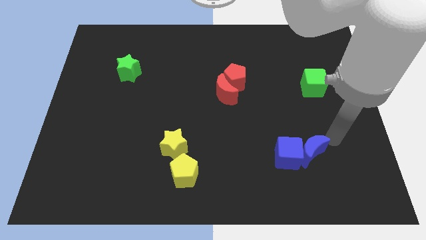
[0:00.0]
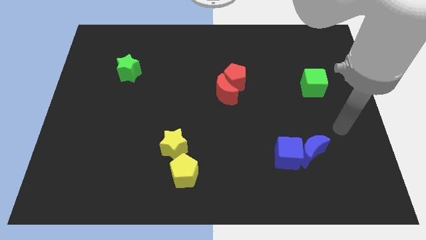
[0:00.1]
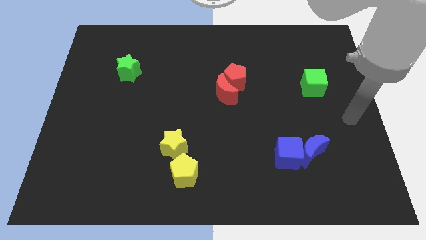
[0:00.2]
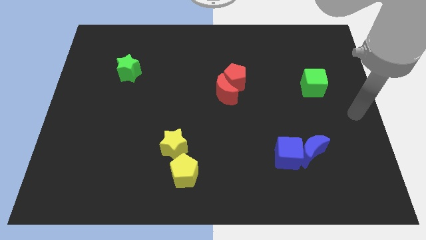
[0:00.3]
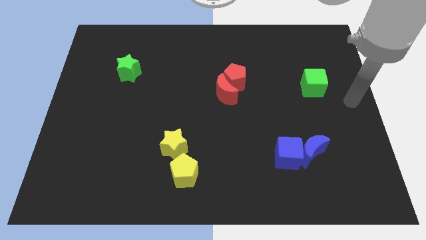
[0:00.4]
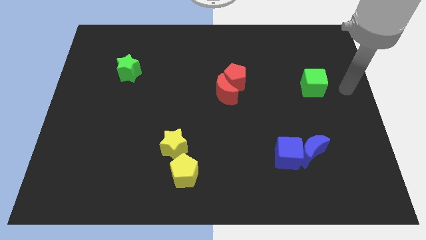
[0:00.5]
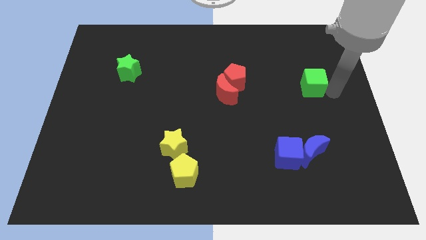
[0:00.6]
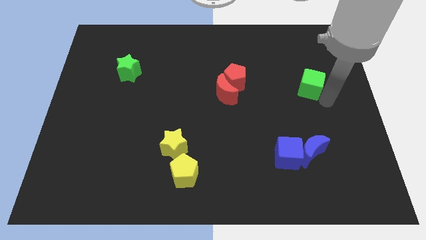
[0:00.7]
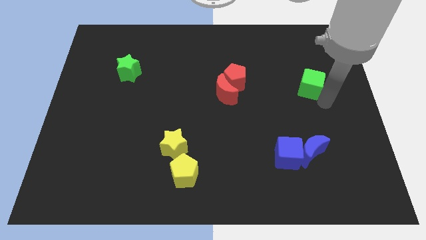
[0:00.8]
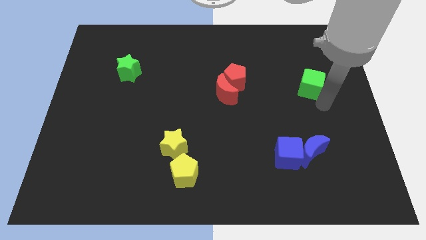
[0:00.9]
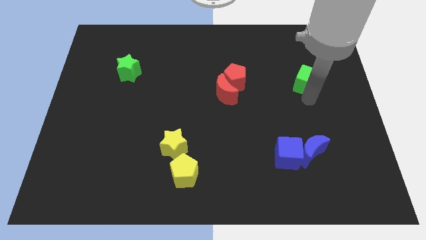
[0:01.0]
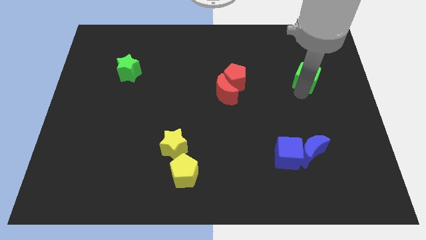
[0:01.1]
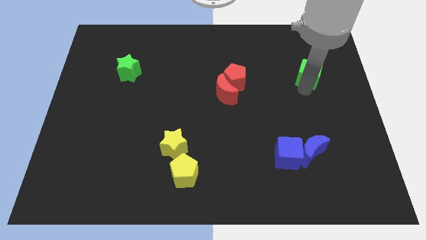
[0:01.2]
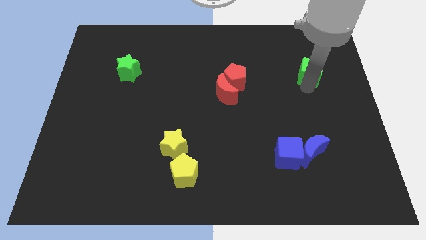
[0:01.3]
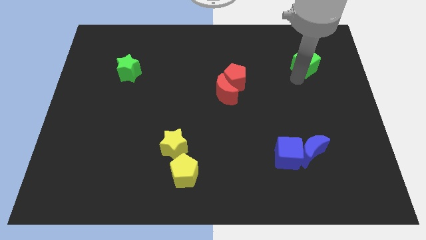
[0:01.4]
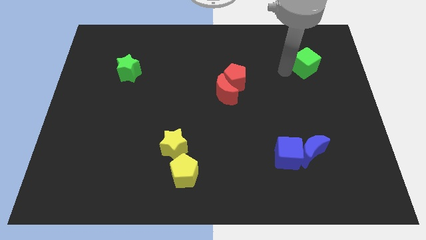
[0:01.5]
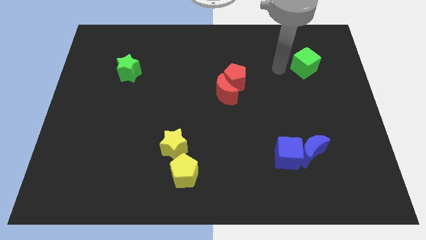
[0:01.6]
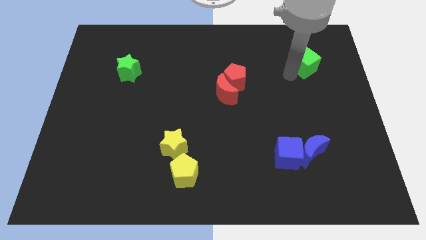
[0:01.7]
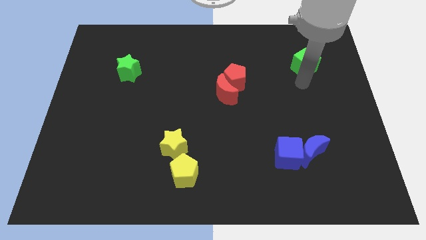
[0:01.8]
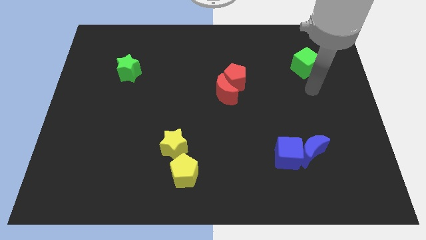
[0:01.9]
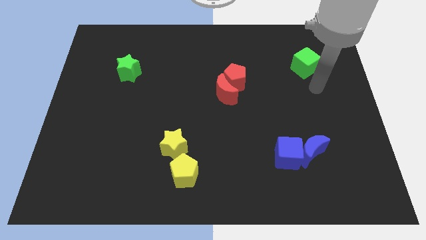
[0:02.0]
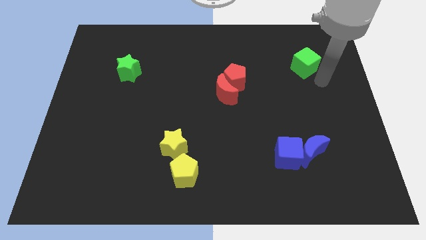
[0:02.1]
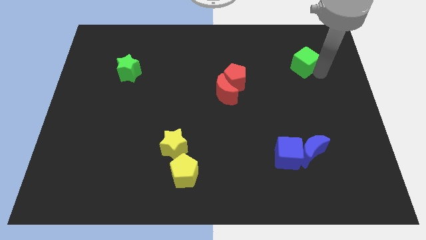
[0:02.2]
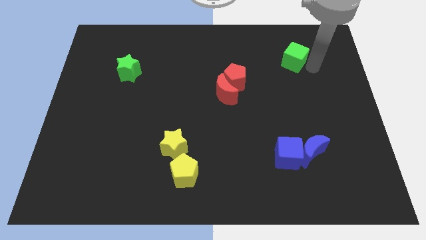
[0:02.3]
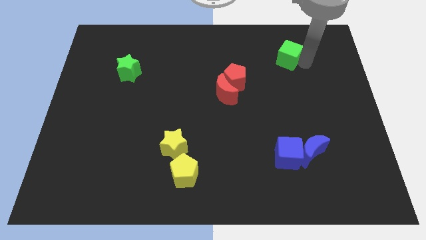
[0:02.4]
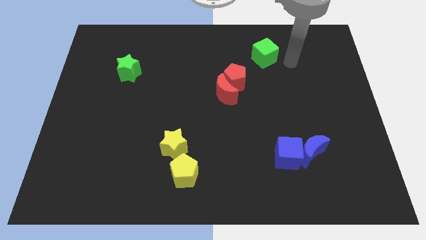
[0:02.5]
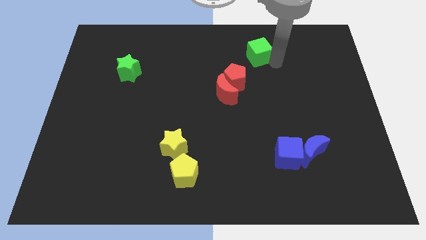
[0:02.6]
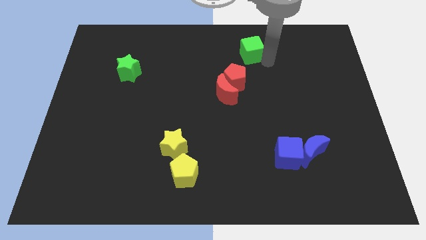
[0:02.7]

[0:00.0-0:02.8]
move the green cube to the top right of the red pentagon

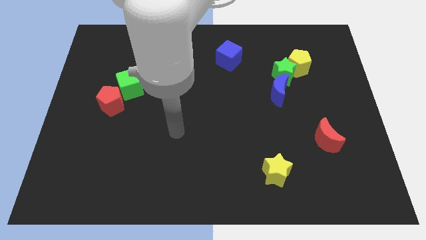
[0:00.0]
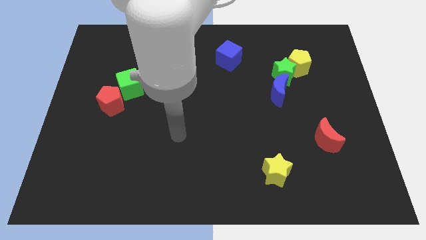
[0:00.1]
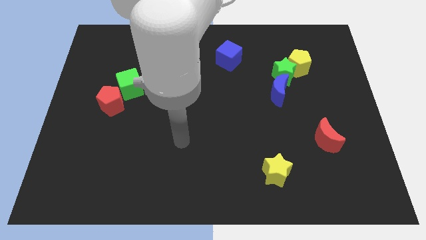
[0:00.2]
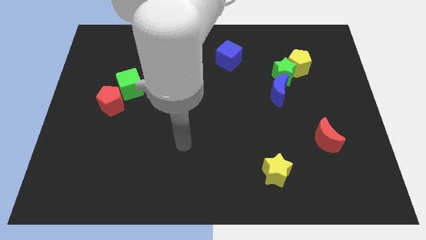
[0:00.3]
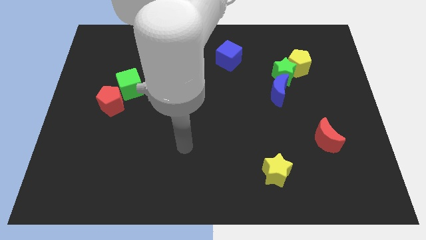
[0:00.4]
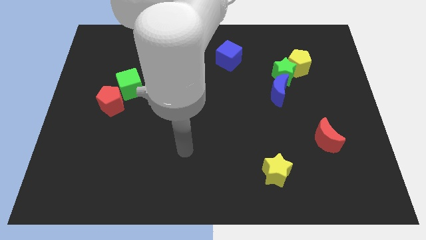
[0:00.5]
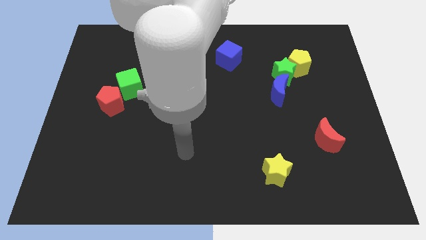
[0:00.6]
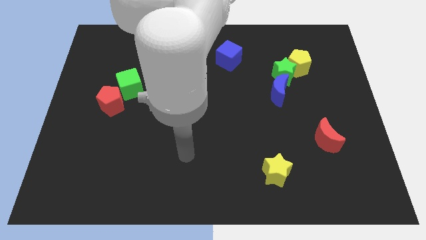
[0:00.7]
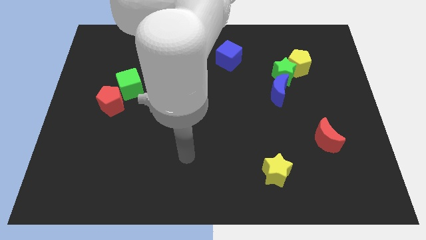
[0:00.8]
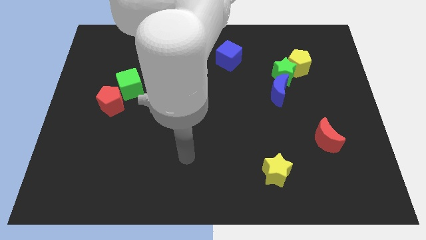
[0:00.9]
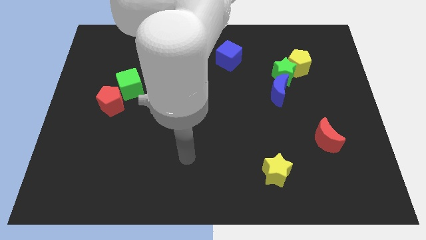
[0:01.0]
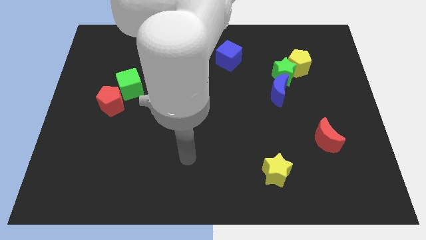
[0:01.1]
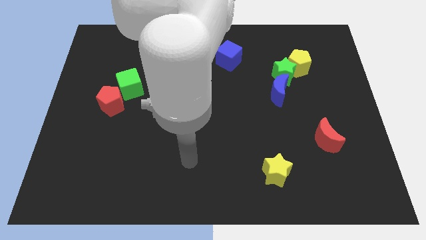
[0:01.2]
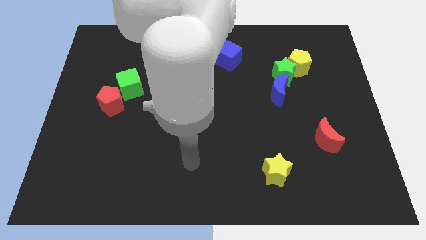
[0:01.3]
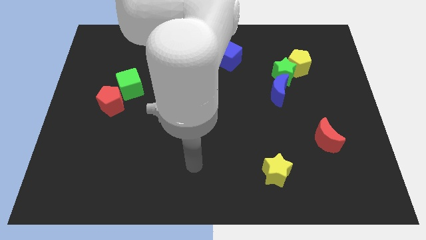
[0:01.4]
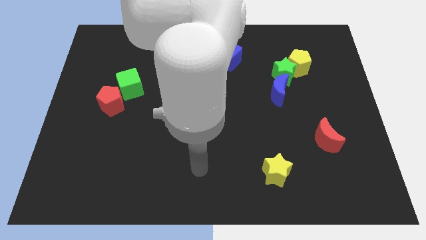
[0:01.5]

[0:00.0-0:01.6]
place your arm diagonal to the left of the yellow star

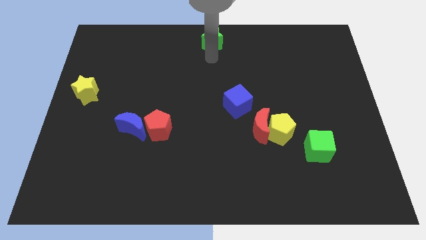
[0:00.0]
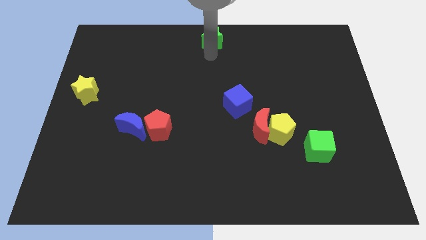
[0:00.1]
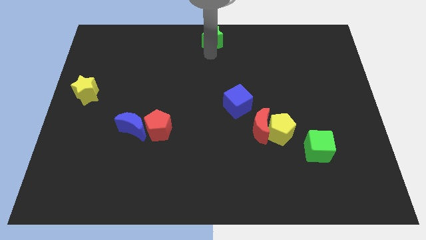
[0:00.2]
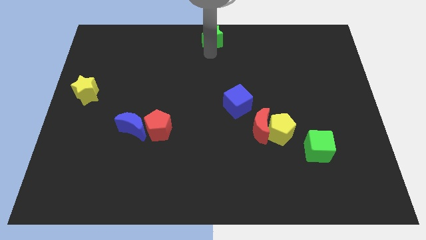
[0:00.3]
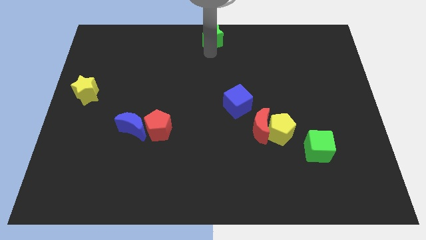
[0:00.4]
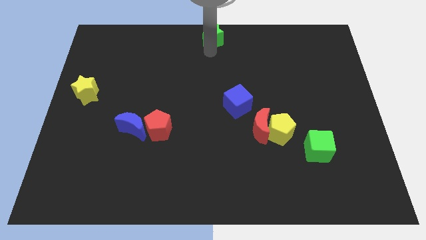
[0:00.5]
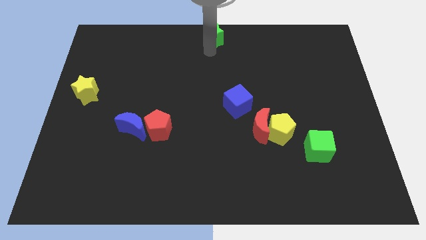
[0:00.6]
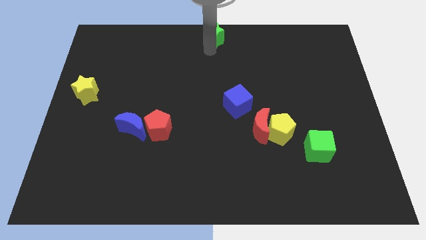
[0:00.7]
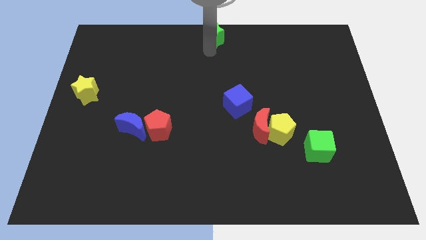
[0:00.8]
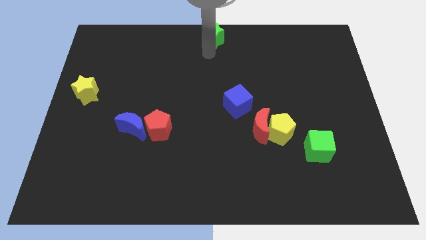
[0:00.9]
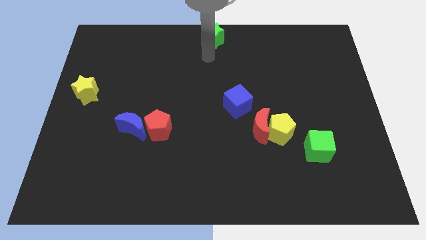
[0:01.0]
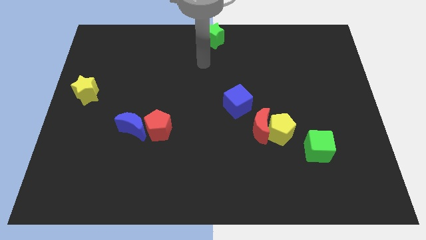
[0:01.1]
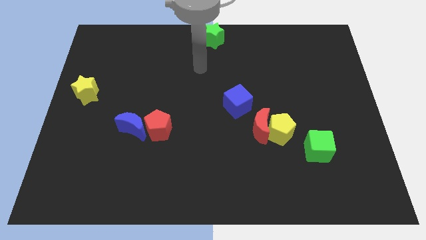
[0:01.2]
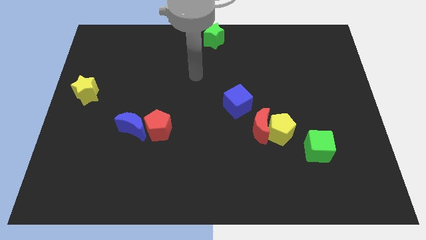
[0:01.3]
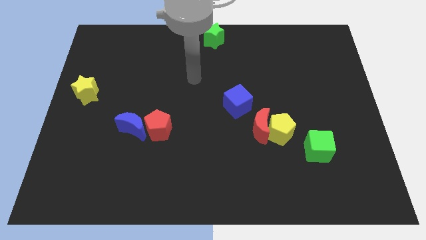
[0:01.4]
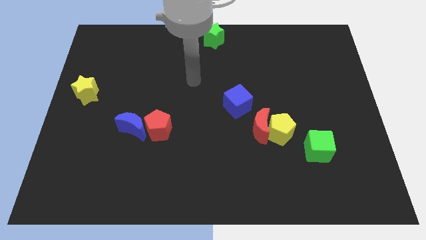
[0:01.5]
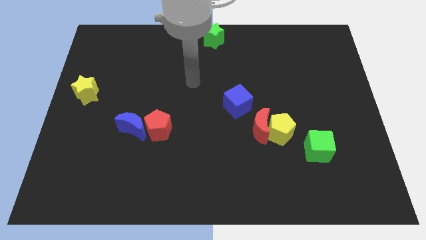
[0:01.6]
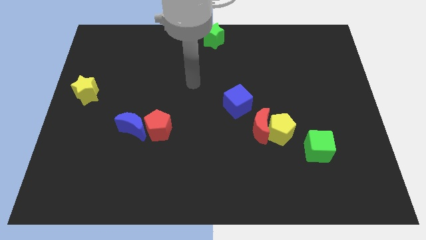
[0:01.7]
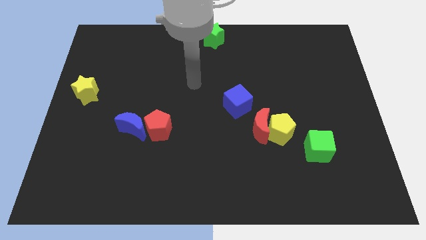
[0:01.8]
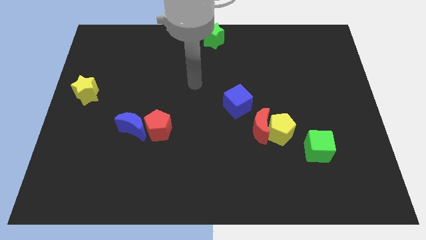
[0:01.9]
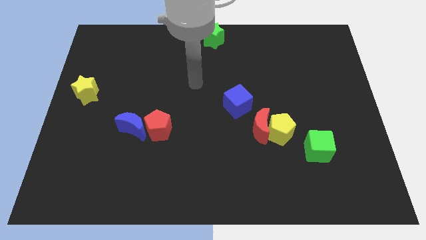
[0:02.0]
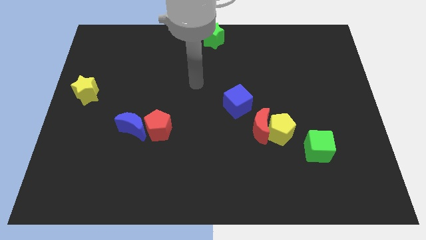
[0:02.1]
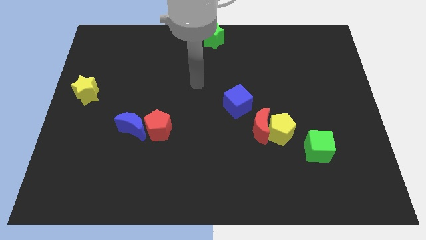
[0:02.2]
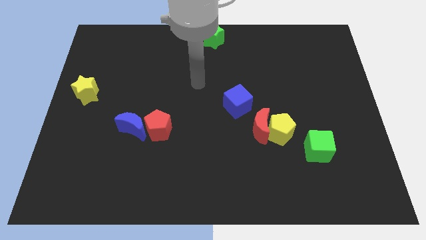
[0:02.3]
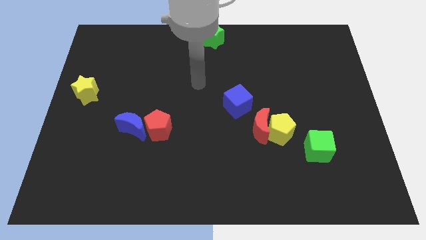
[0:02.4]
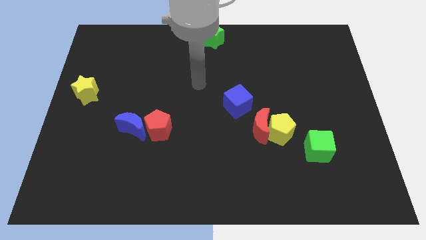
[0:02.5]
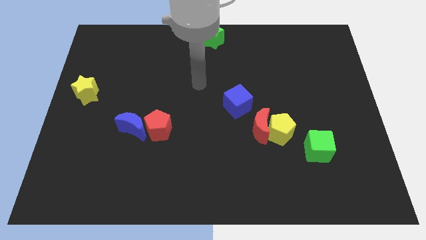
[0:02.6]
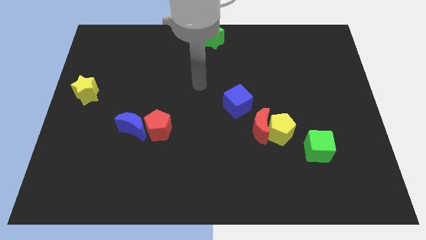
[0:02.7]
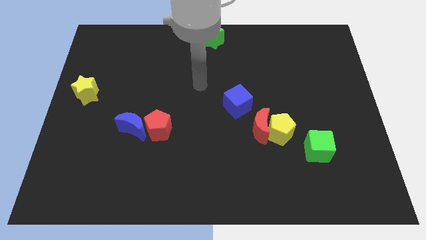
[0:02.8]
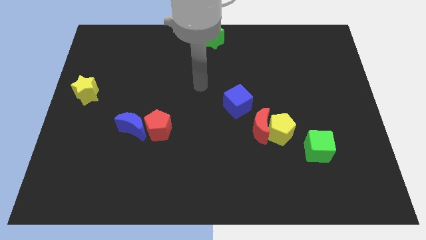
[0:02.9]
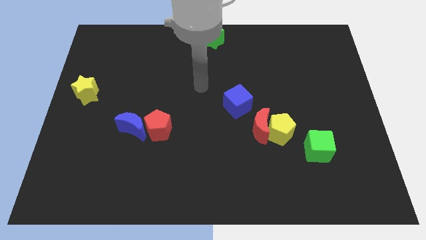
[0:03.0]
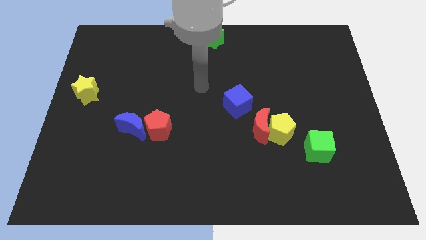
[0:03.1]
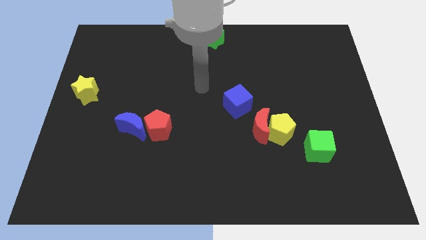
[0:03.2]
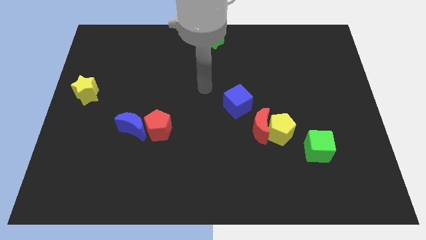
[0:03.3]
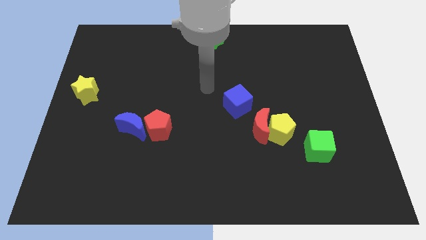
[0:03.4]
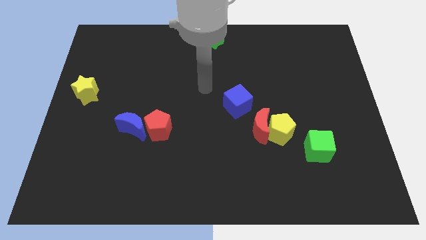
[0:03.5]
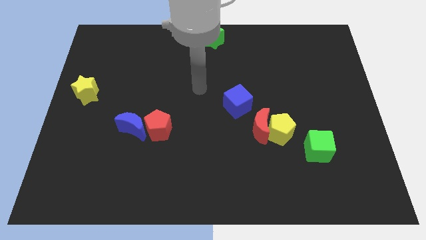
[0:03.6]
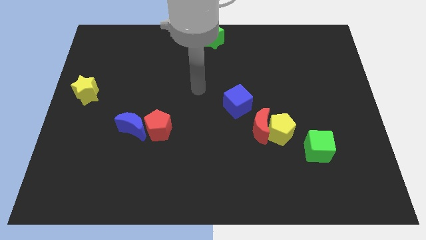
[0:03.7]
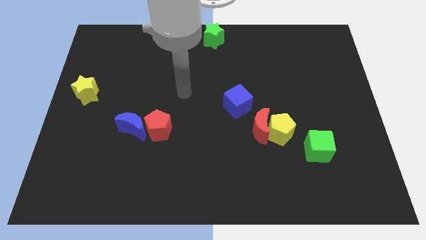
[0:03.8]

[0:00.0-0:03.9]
move the arm away from the green star

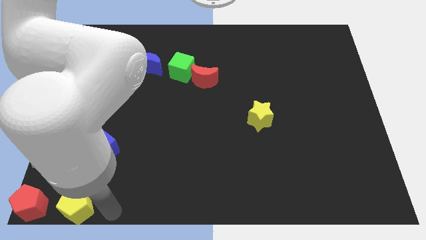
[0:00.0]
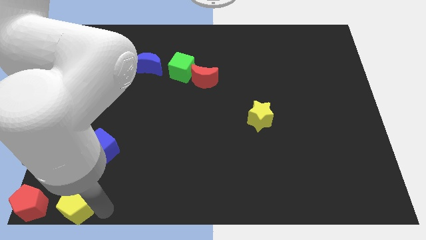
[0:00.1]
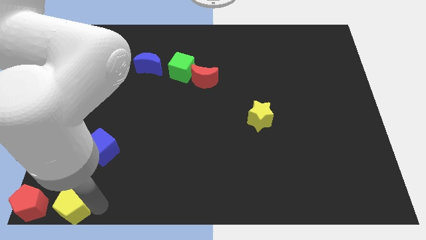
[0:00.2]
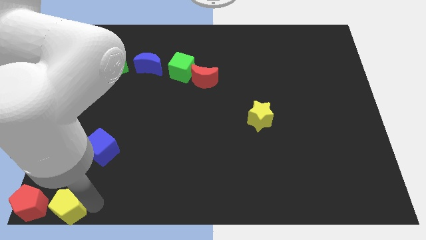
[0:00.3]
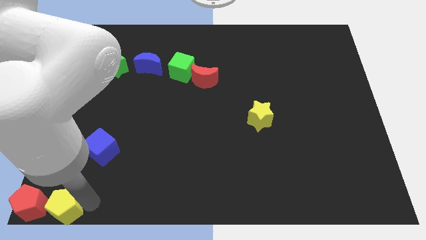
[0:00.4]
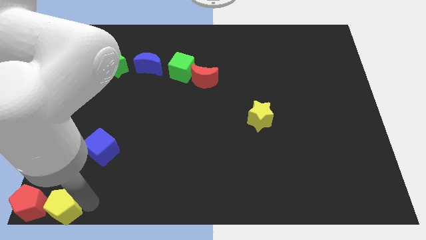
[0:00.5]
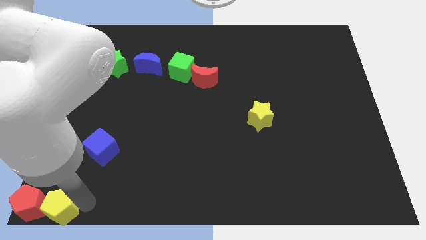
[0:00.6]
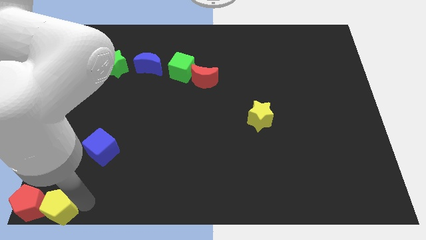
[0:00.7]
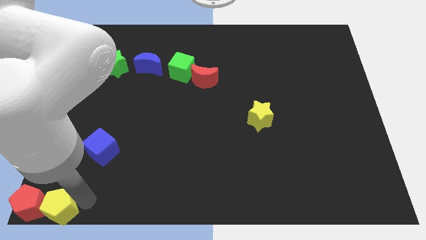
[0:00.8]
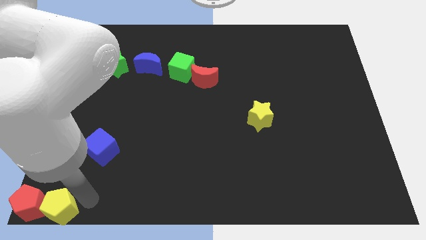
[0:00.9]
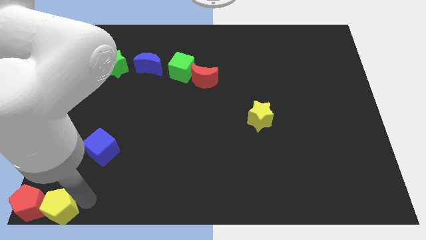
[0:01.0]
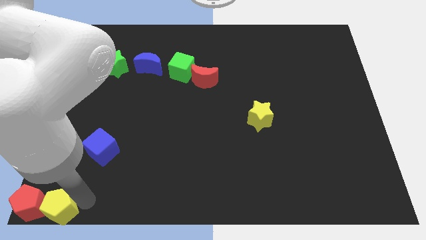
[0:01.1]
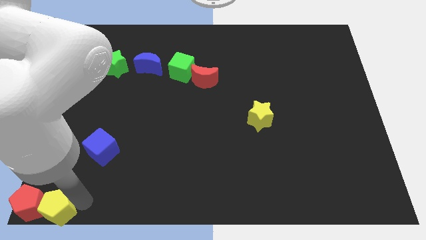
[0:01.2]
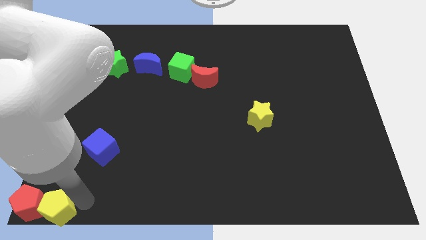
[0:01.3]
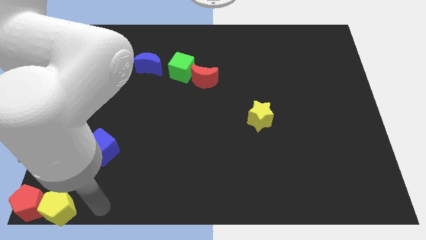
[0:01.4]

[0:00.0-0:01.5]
move the yellow pentagon to the right side of red pentagon
